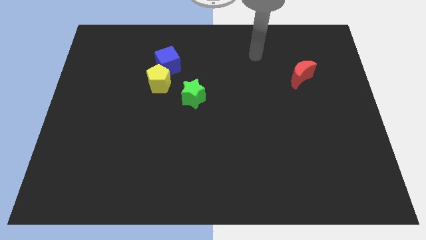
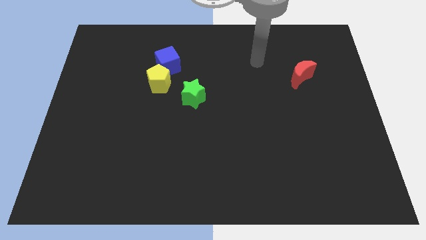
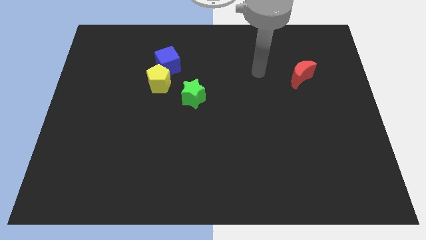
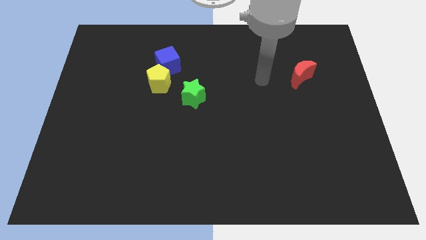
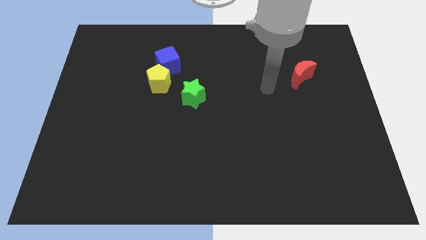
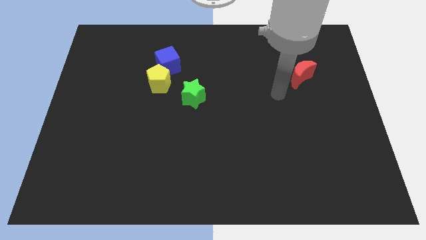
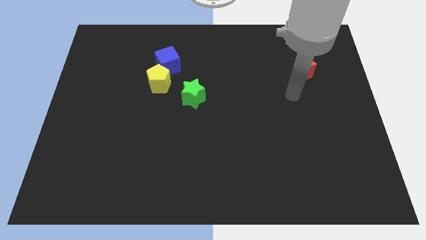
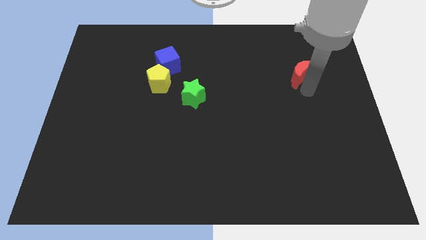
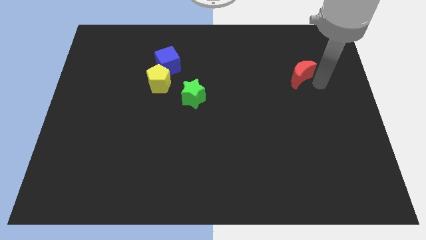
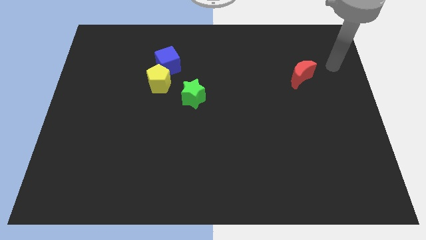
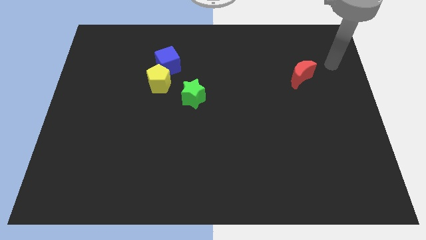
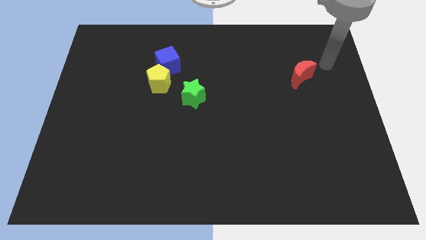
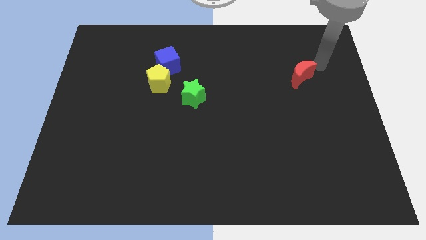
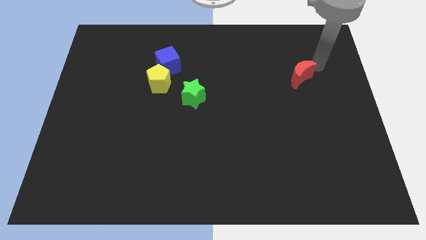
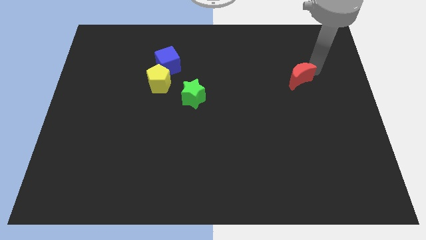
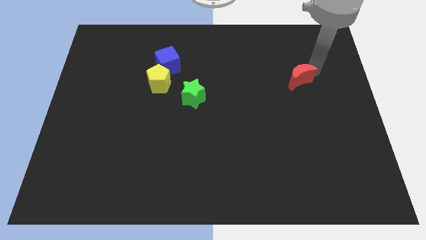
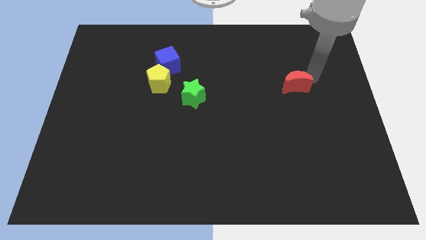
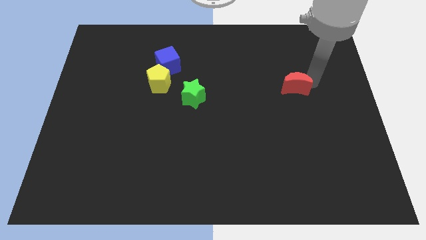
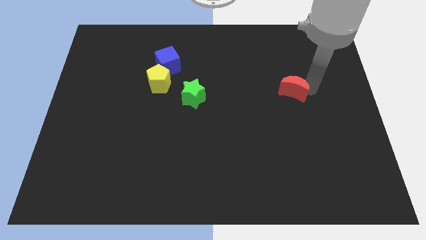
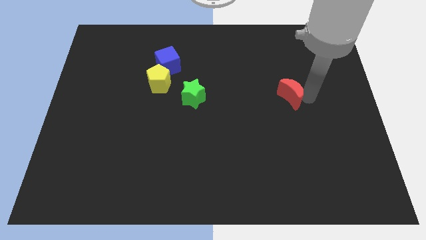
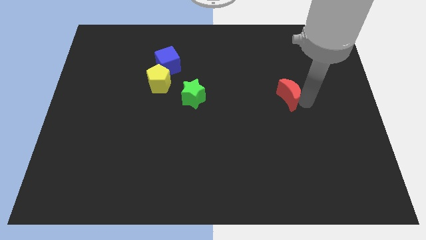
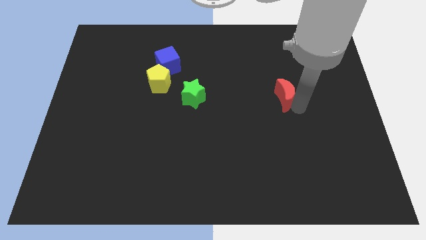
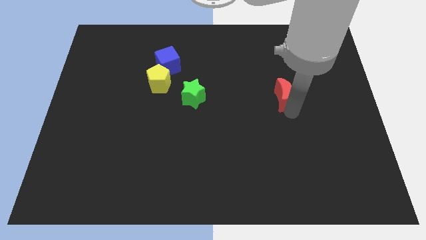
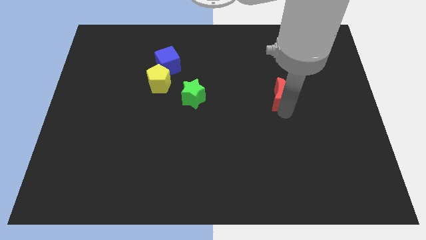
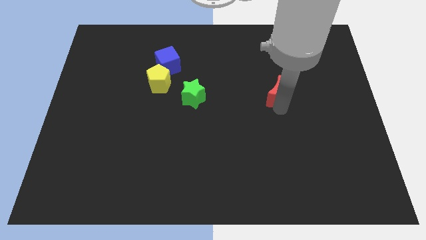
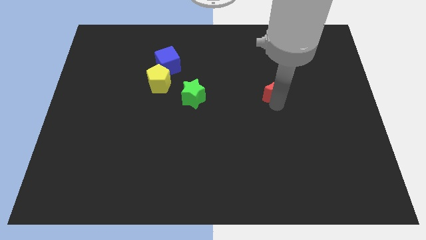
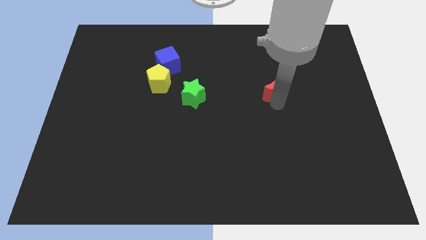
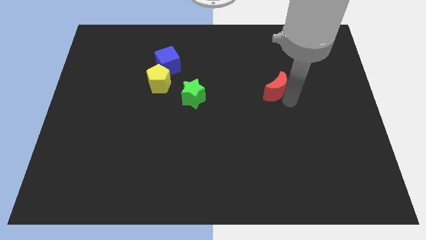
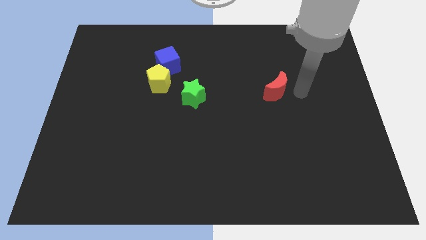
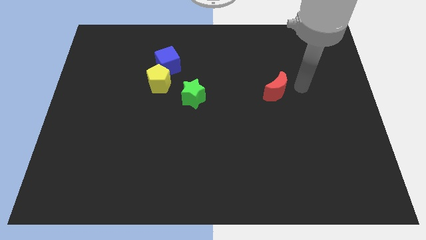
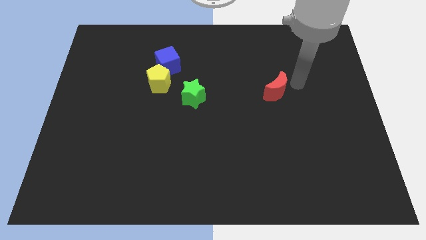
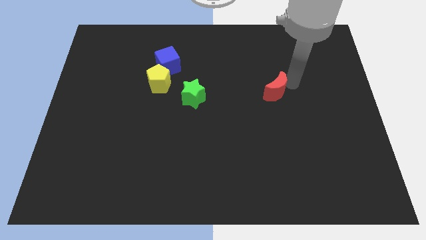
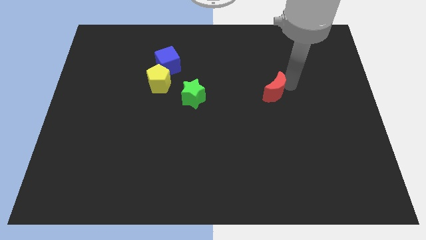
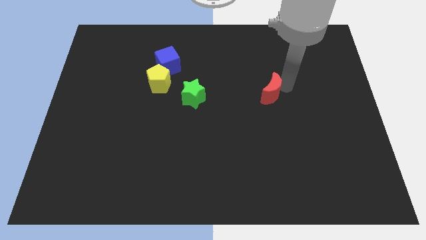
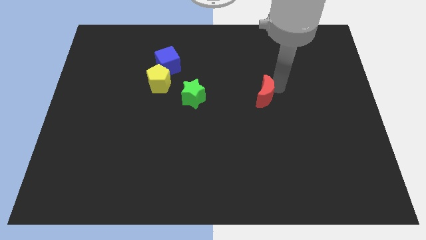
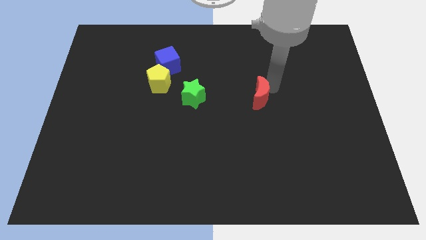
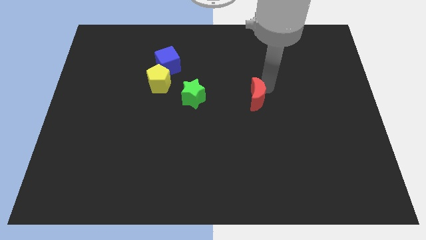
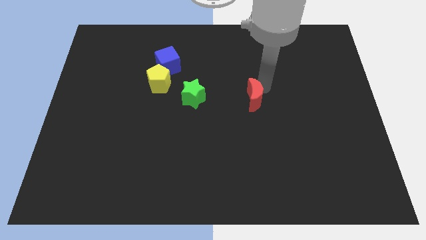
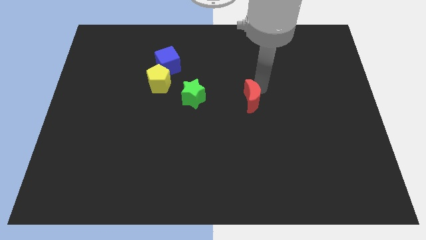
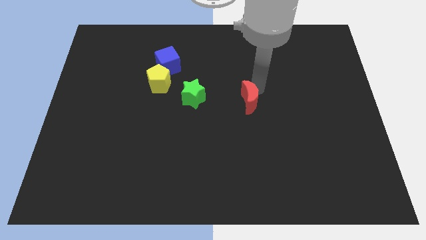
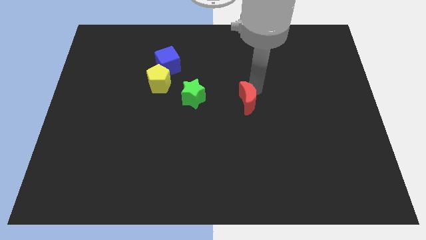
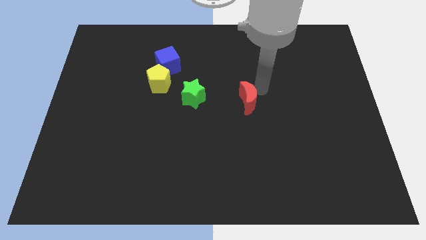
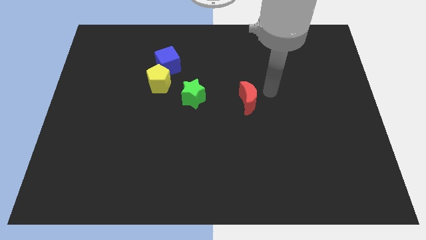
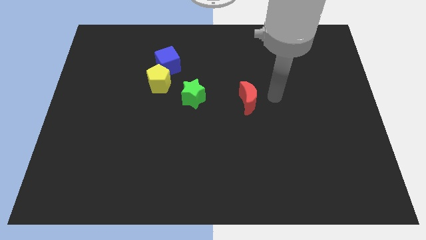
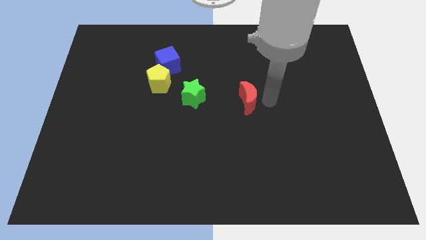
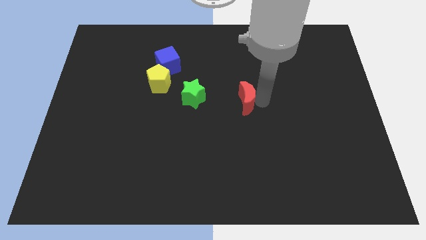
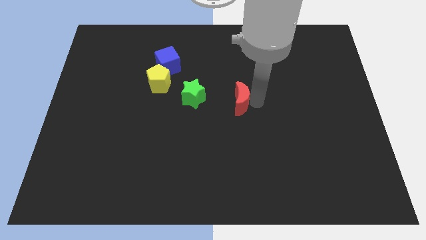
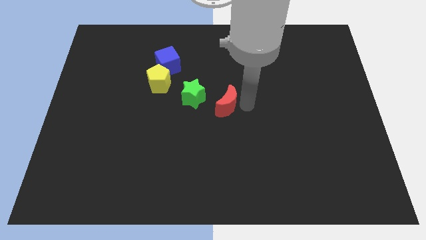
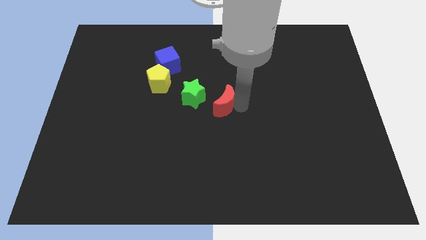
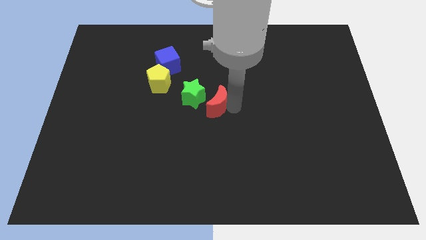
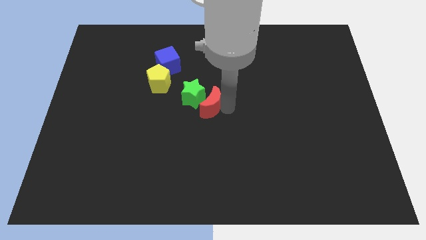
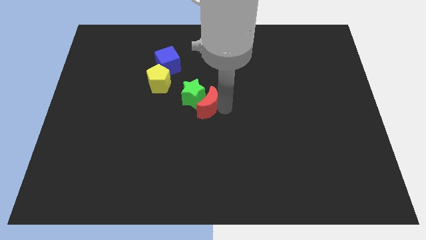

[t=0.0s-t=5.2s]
move the red block close to the green star

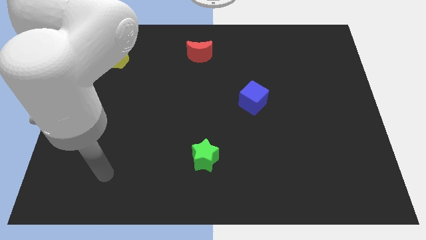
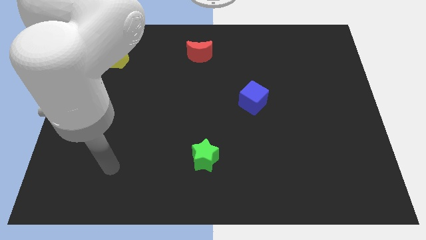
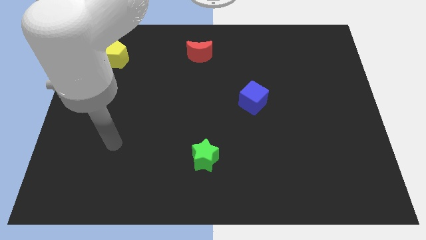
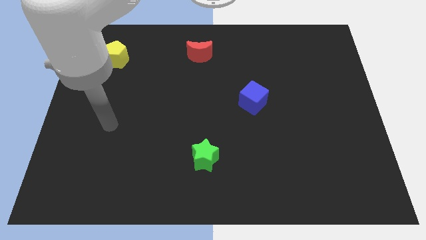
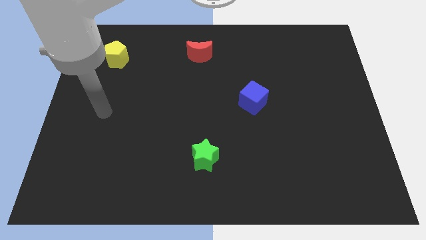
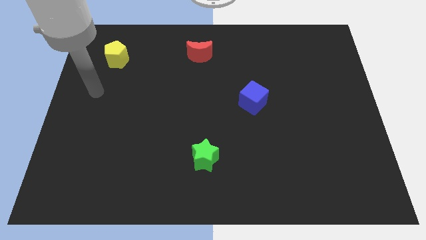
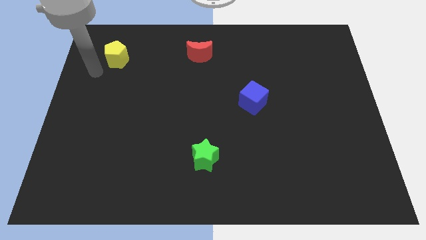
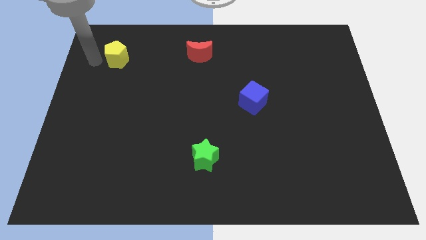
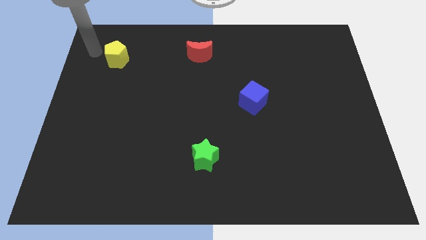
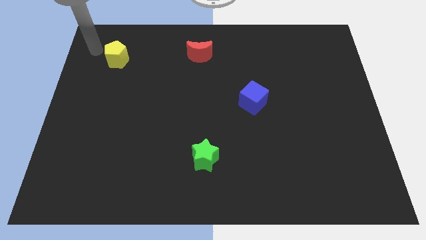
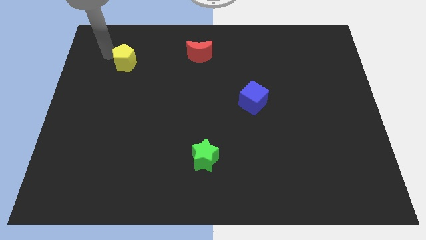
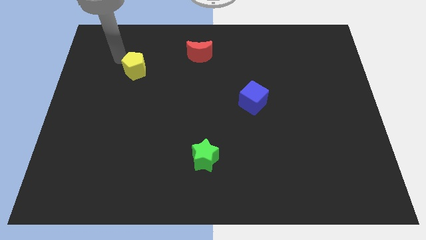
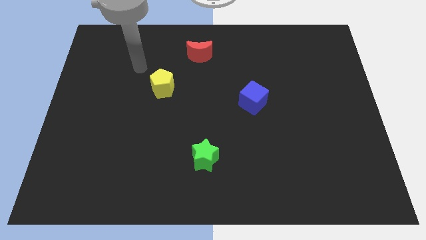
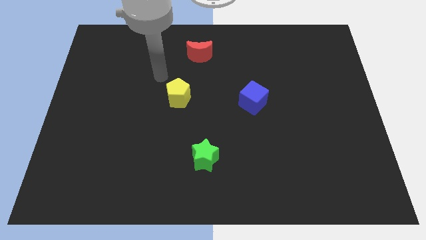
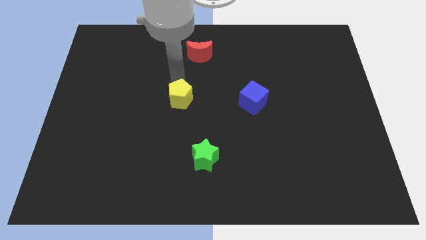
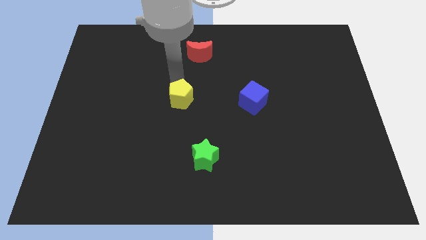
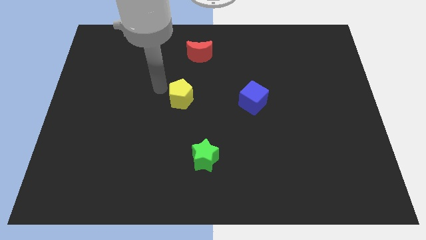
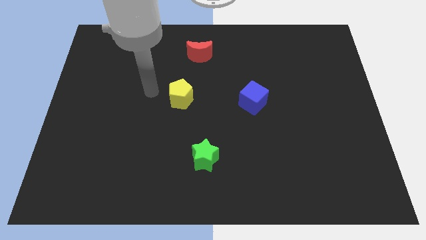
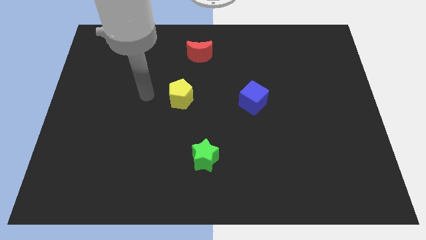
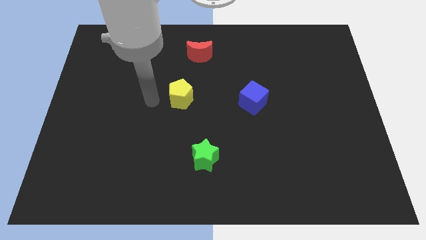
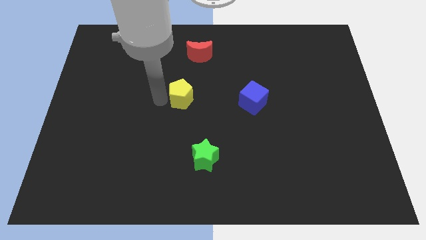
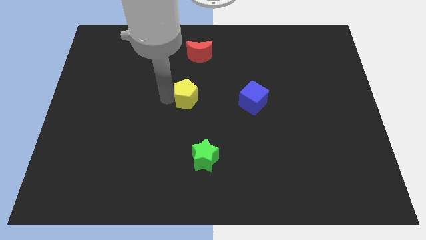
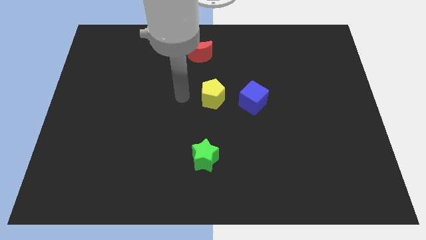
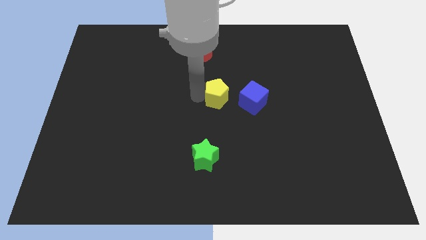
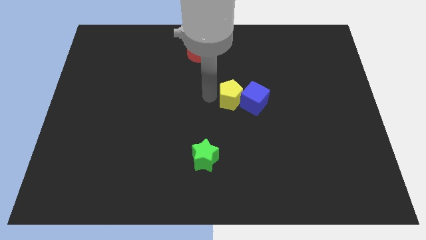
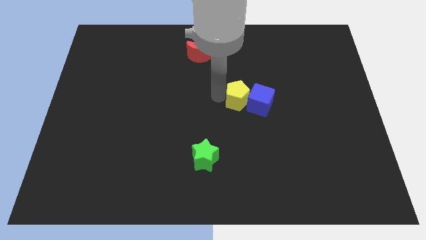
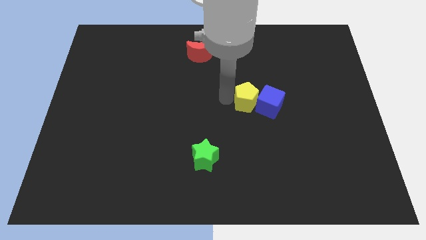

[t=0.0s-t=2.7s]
move the yellow block towards the cube
